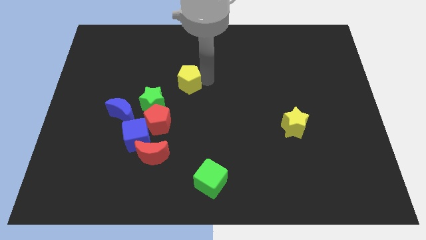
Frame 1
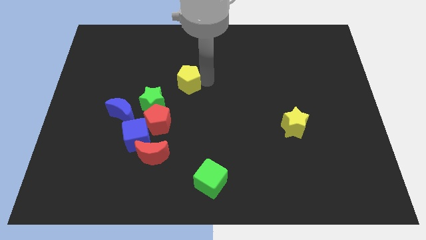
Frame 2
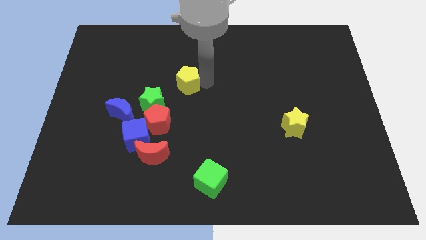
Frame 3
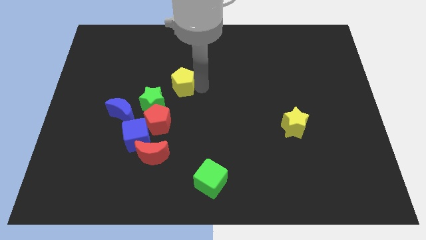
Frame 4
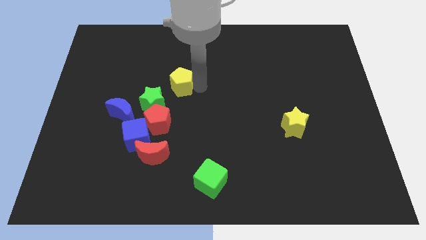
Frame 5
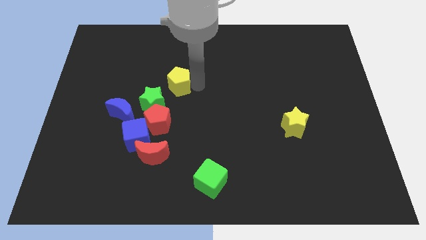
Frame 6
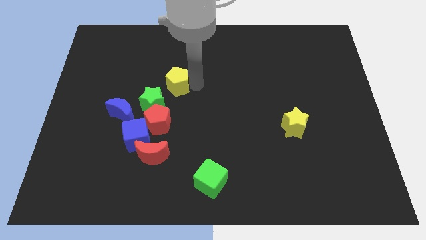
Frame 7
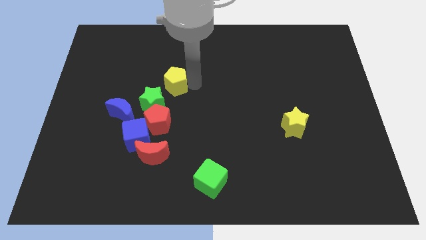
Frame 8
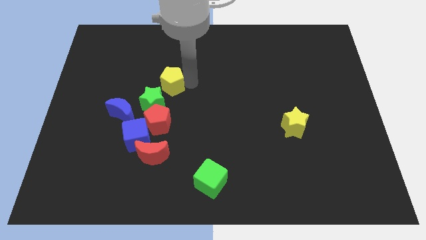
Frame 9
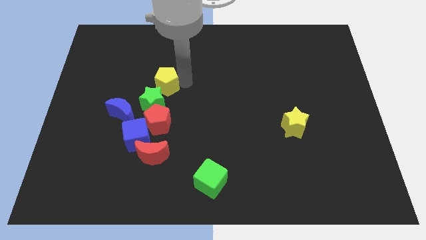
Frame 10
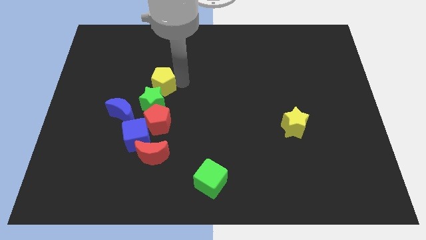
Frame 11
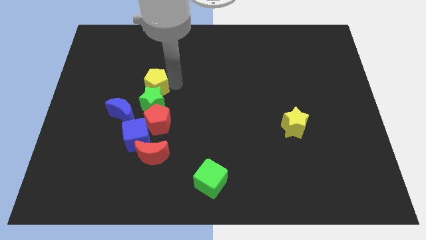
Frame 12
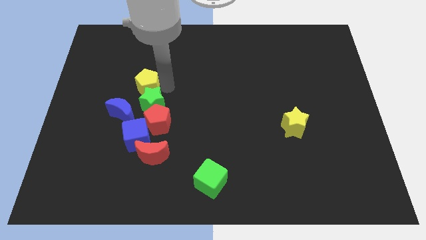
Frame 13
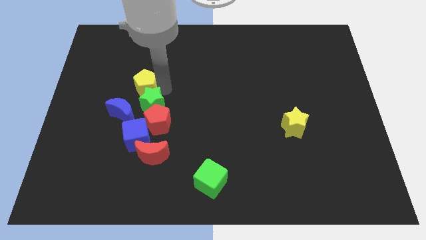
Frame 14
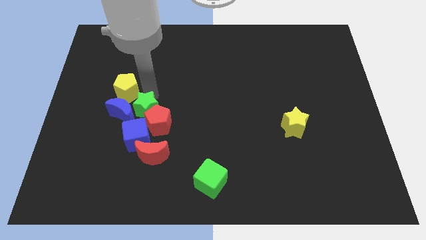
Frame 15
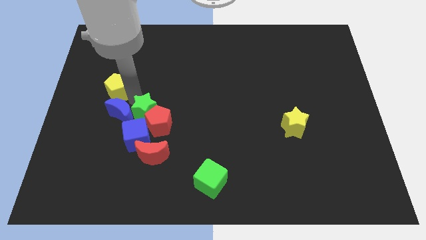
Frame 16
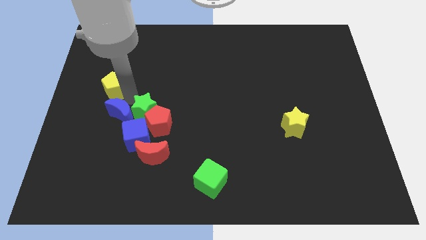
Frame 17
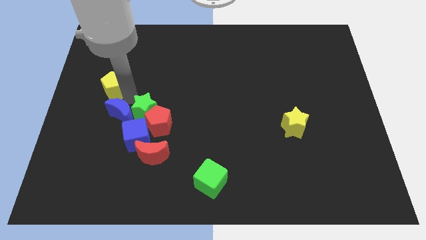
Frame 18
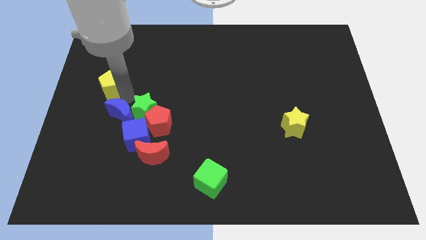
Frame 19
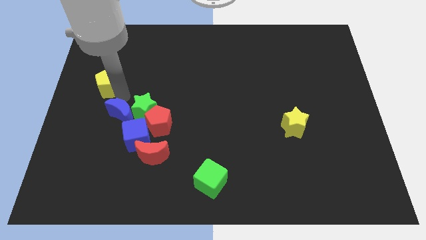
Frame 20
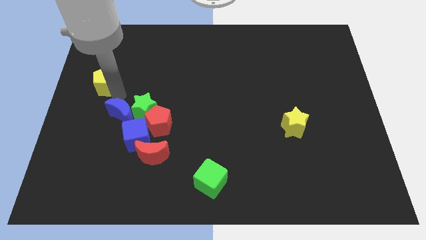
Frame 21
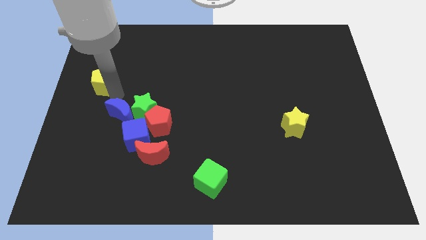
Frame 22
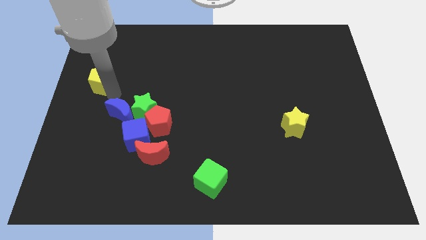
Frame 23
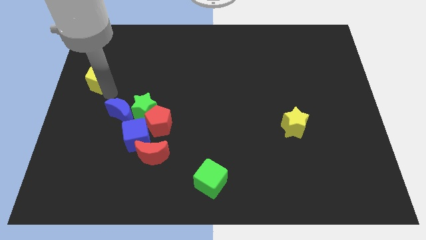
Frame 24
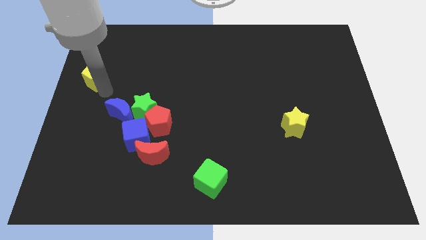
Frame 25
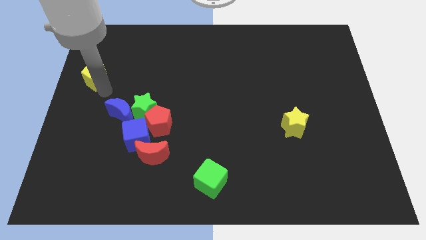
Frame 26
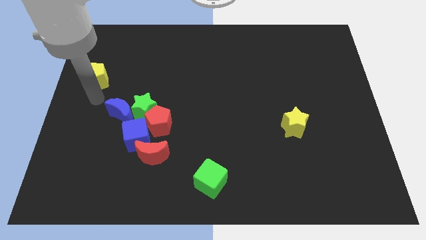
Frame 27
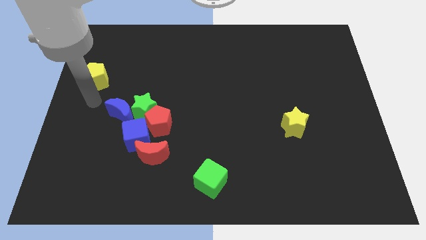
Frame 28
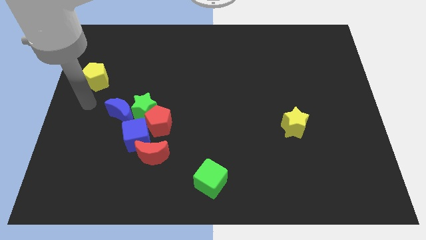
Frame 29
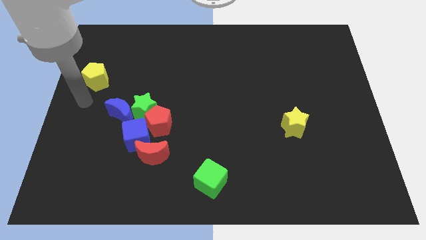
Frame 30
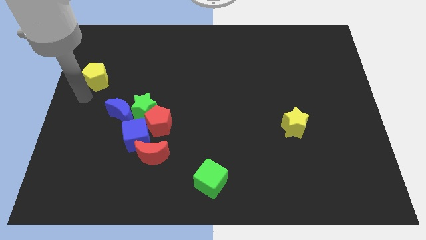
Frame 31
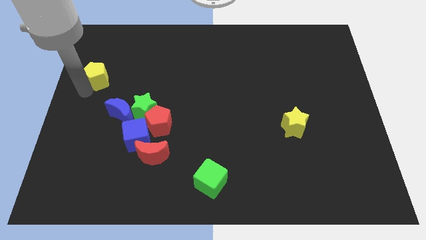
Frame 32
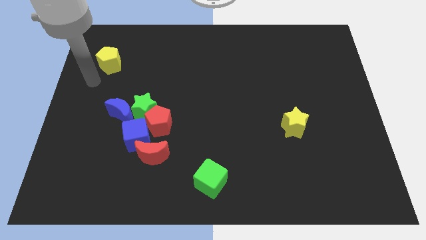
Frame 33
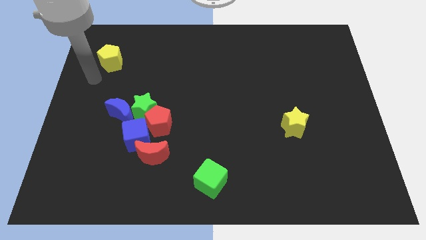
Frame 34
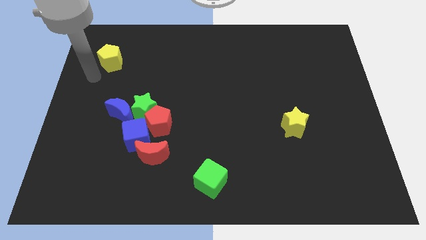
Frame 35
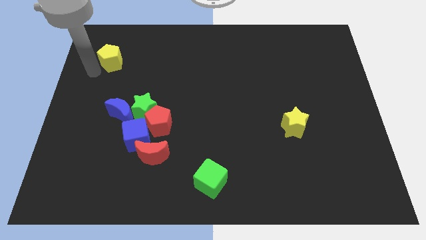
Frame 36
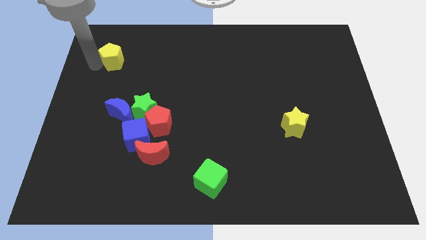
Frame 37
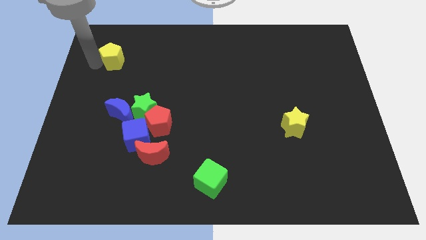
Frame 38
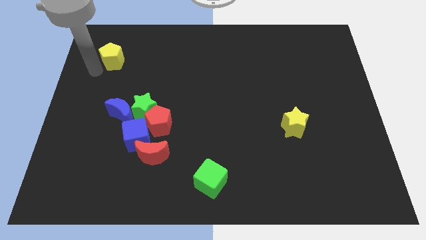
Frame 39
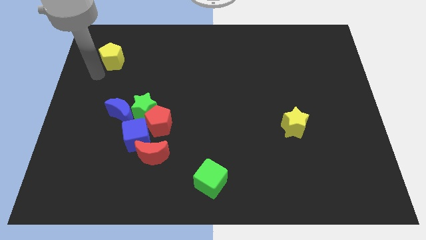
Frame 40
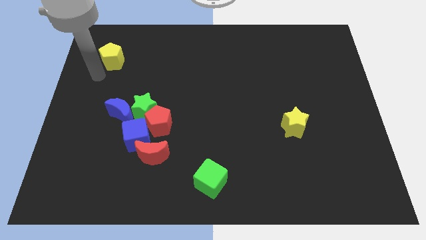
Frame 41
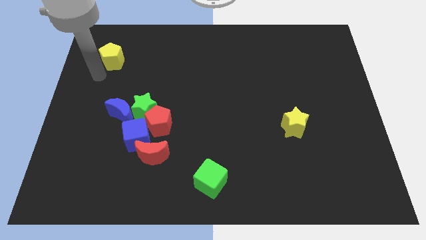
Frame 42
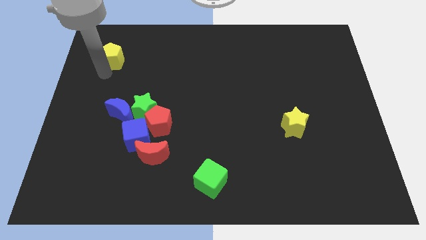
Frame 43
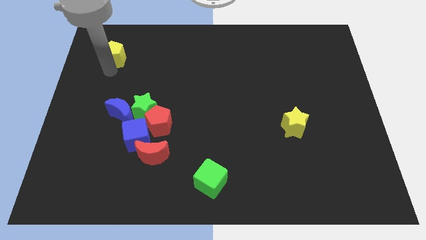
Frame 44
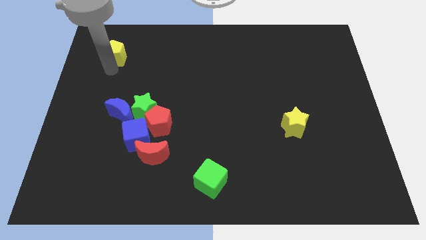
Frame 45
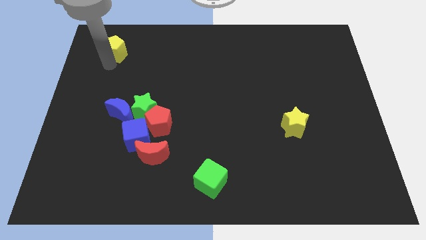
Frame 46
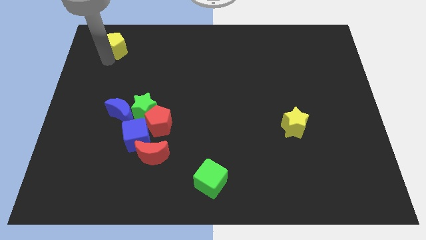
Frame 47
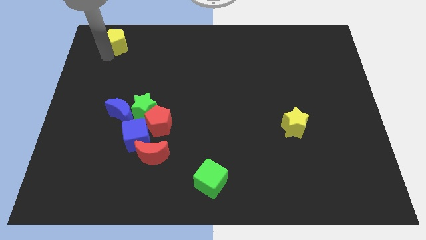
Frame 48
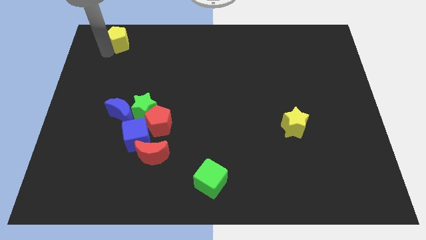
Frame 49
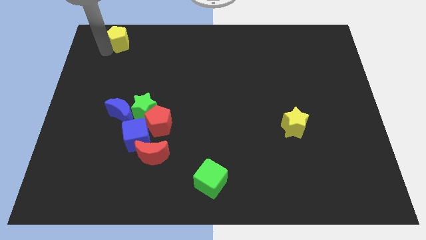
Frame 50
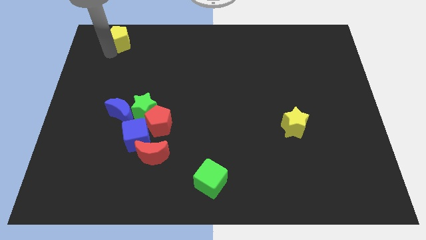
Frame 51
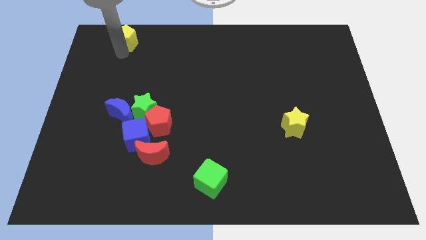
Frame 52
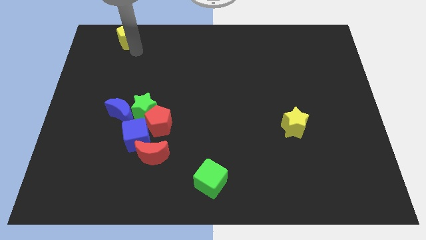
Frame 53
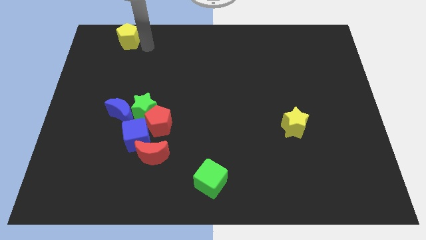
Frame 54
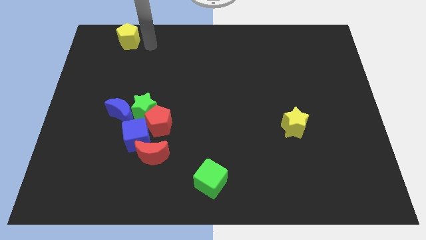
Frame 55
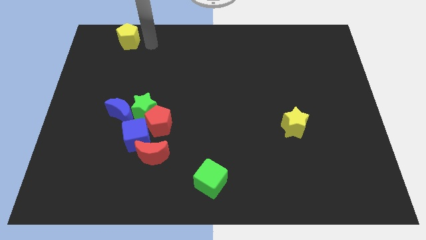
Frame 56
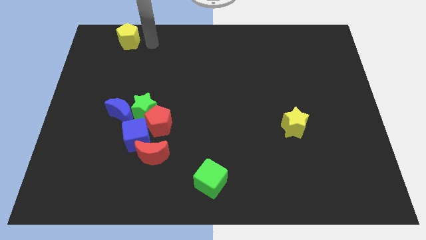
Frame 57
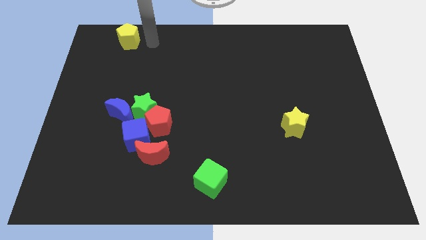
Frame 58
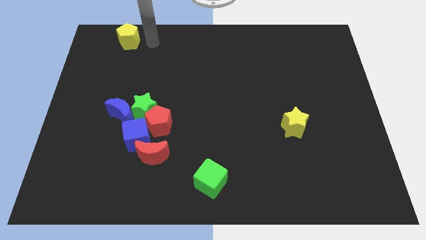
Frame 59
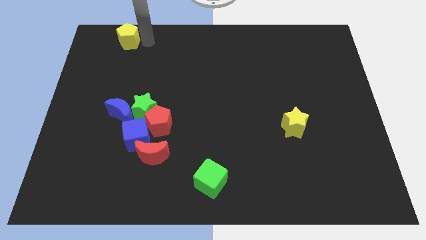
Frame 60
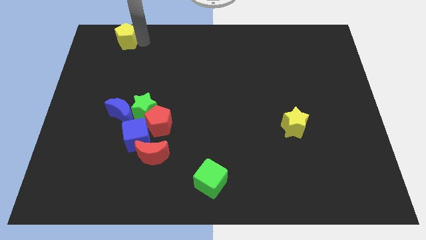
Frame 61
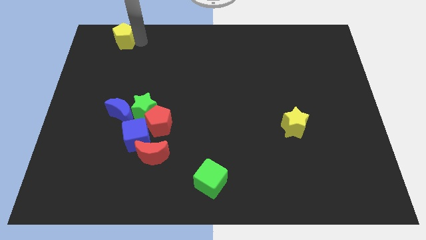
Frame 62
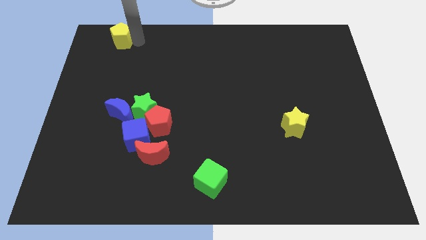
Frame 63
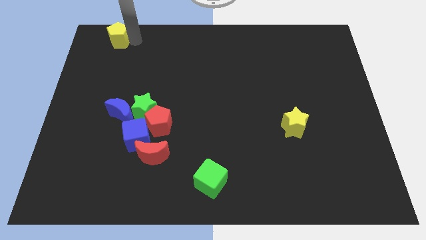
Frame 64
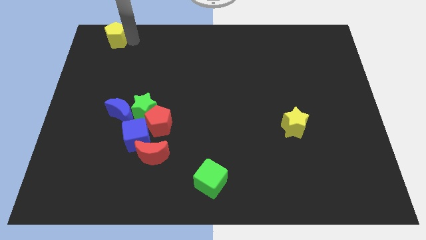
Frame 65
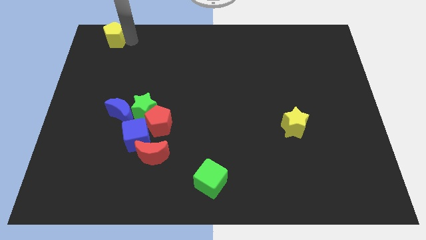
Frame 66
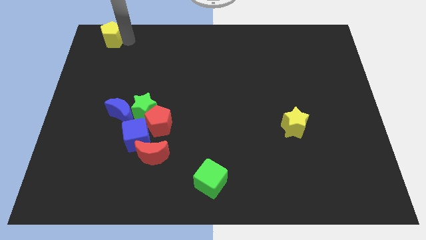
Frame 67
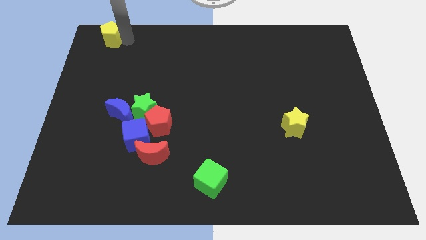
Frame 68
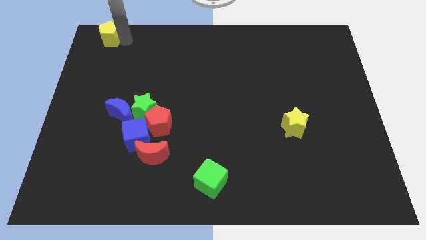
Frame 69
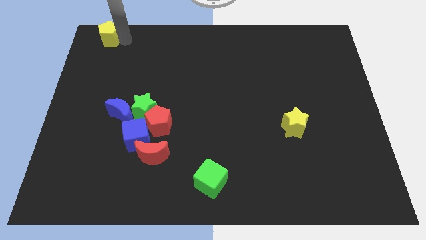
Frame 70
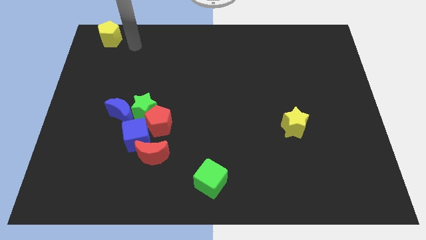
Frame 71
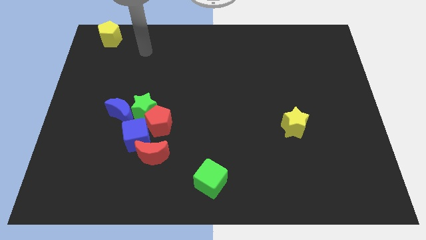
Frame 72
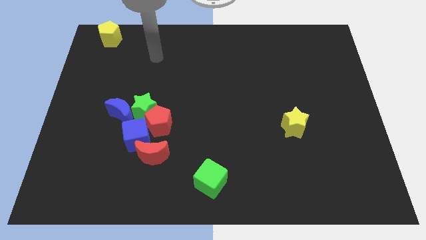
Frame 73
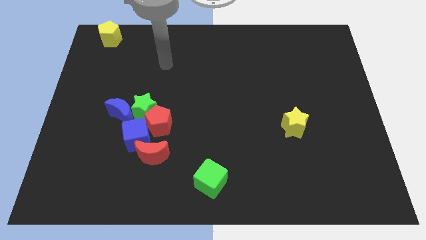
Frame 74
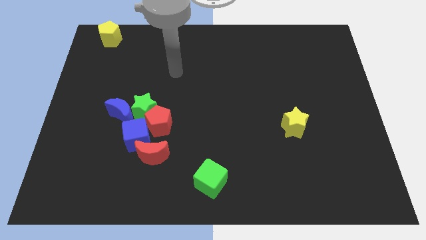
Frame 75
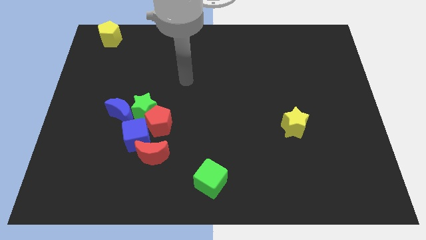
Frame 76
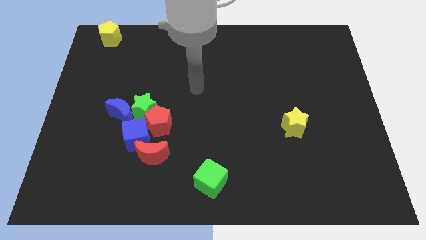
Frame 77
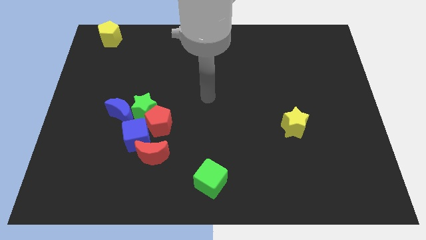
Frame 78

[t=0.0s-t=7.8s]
move the yellow pentagon towards the top left corner of the board

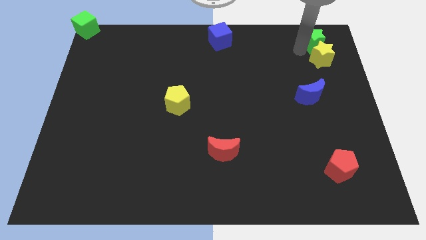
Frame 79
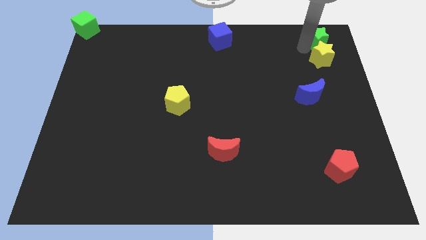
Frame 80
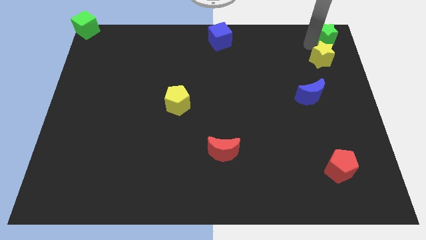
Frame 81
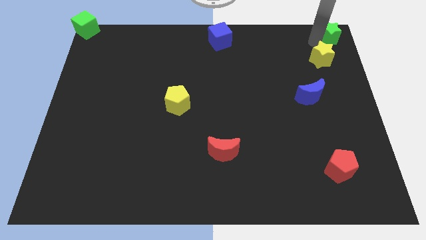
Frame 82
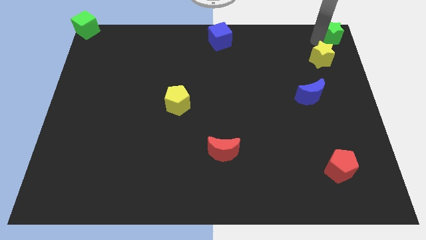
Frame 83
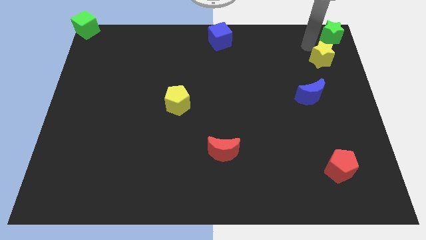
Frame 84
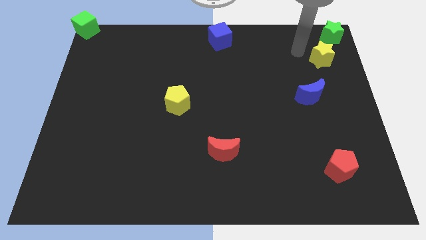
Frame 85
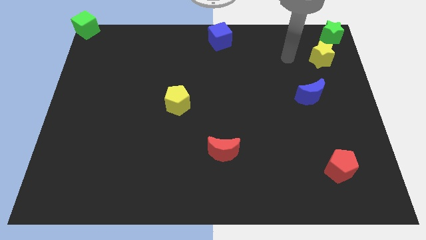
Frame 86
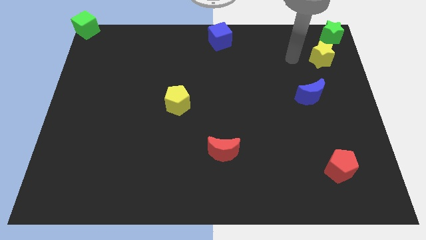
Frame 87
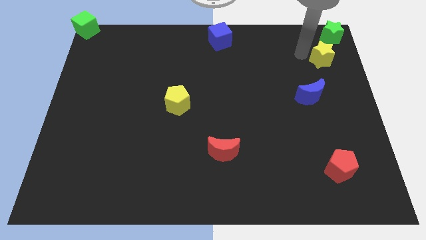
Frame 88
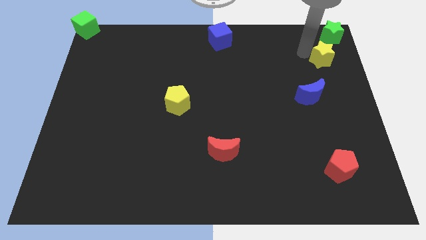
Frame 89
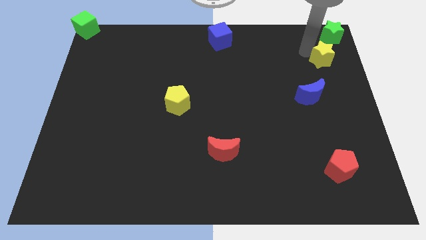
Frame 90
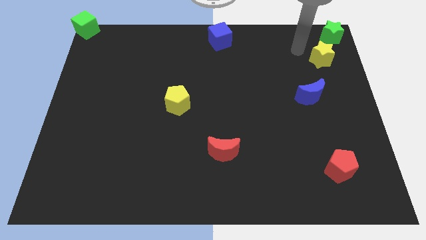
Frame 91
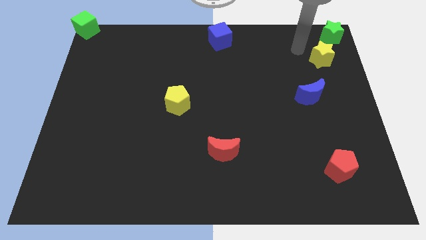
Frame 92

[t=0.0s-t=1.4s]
place green star towards top right corner
